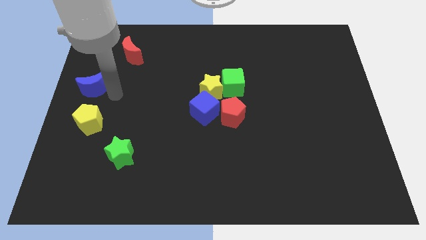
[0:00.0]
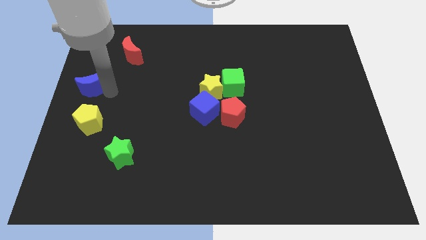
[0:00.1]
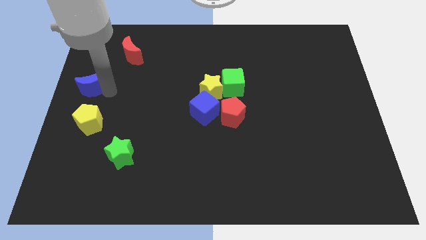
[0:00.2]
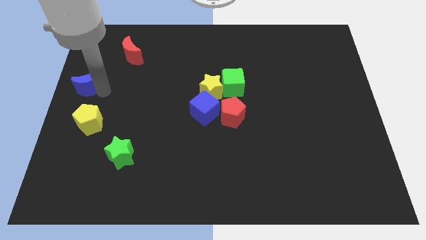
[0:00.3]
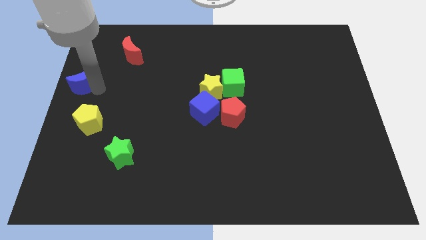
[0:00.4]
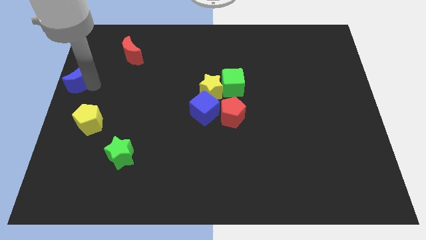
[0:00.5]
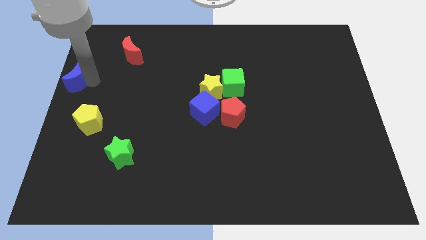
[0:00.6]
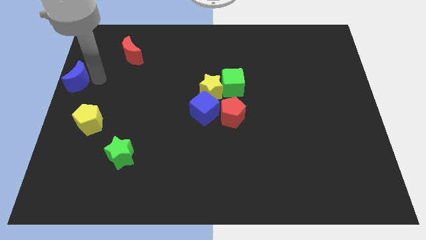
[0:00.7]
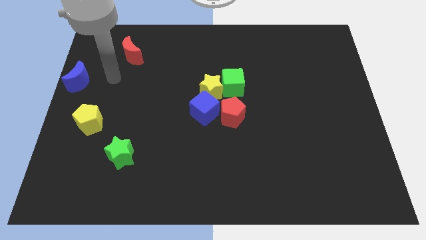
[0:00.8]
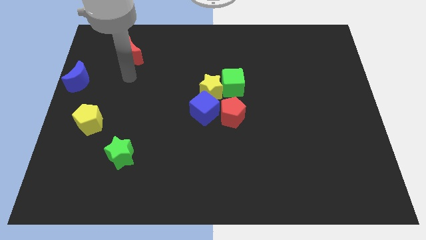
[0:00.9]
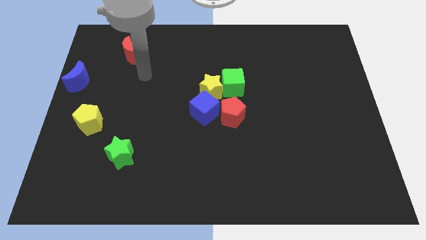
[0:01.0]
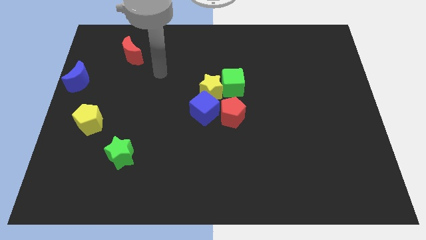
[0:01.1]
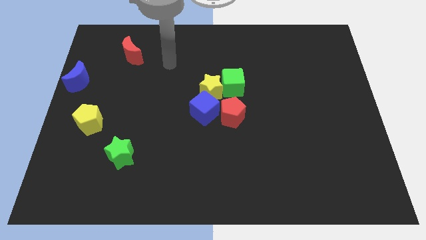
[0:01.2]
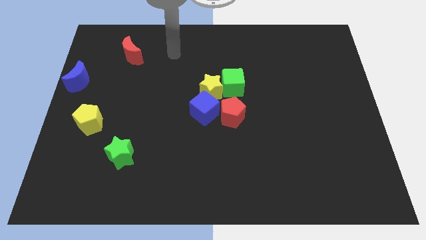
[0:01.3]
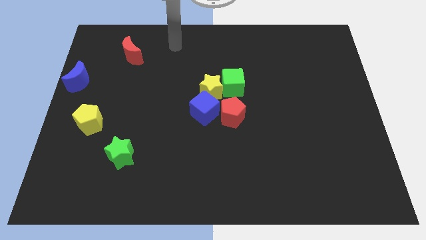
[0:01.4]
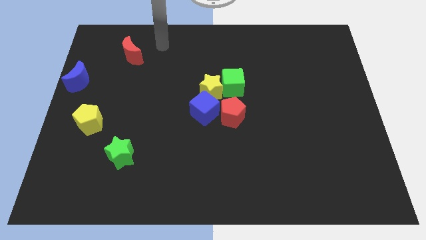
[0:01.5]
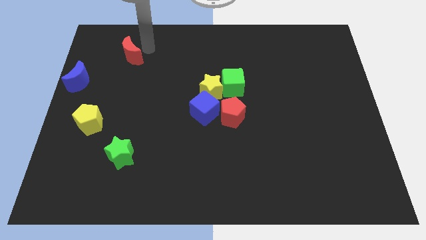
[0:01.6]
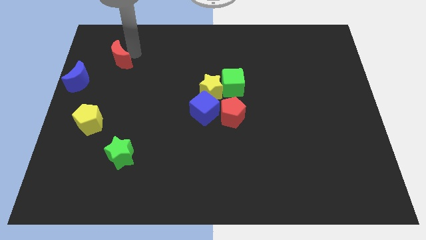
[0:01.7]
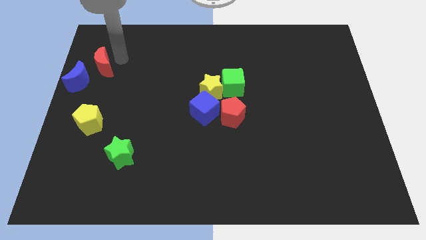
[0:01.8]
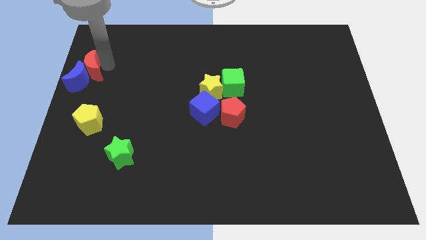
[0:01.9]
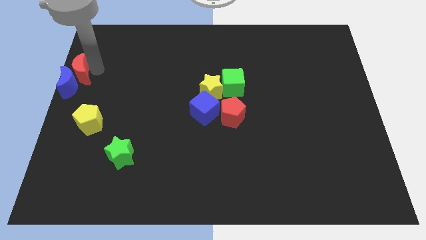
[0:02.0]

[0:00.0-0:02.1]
move the red moon into the blue moon

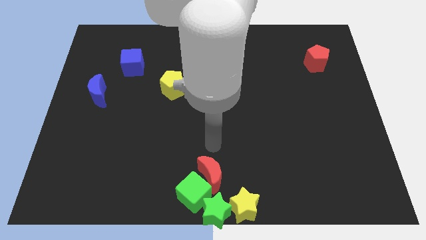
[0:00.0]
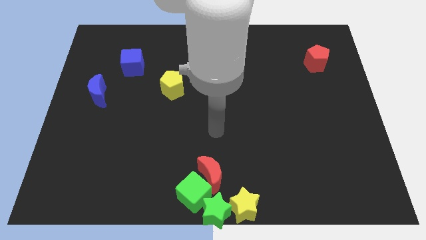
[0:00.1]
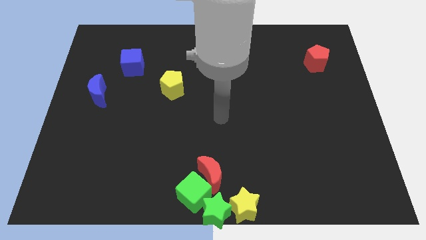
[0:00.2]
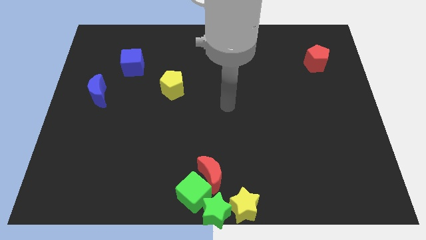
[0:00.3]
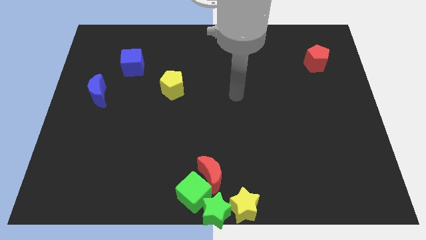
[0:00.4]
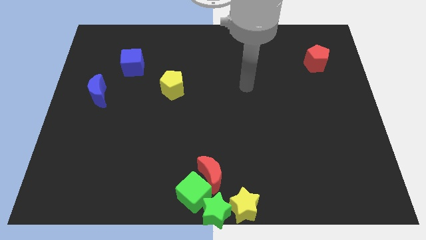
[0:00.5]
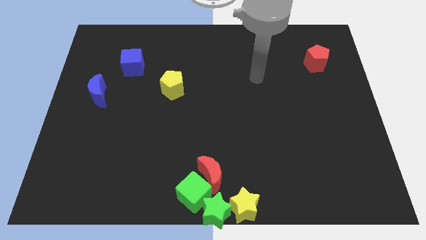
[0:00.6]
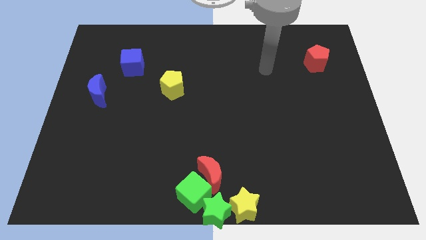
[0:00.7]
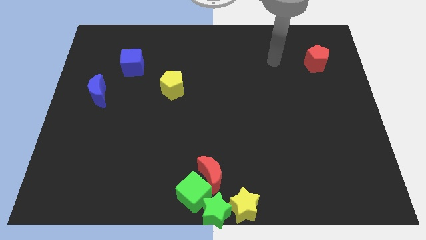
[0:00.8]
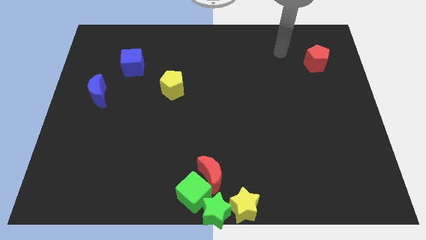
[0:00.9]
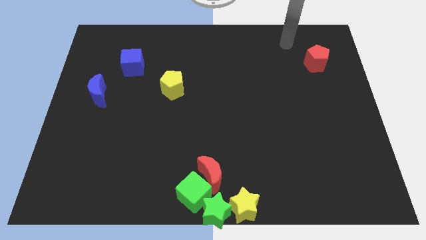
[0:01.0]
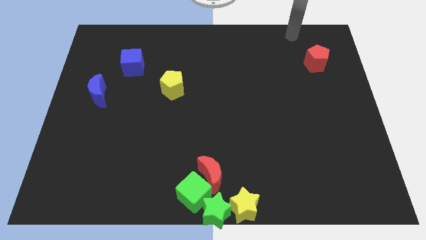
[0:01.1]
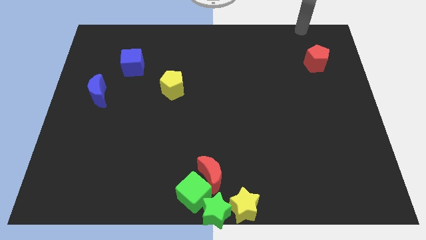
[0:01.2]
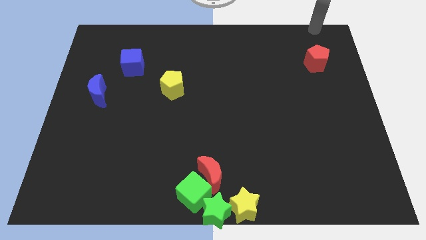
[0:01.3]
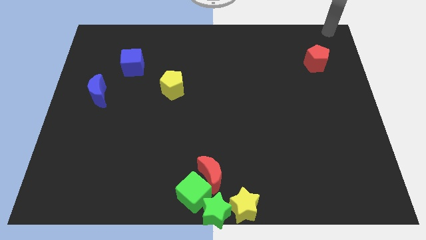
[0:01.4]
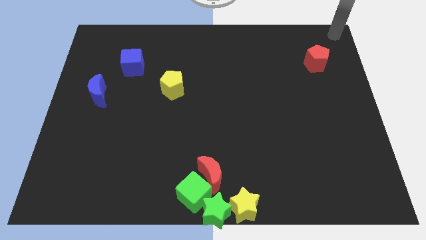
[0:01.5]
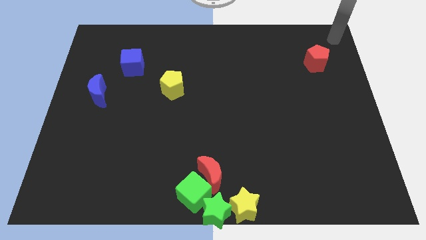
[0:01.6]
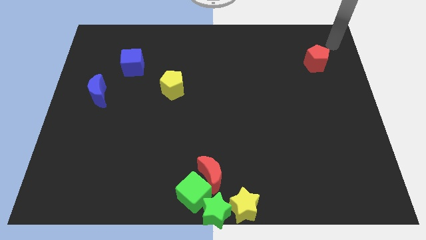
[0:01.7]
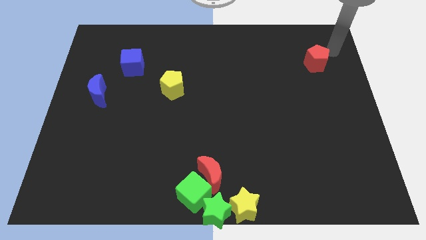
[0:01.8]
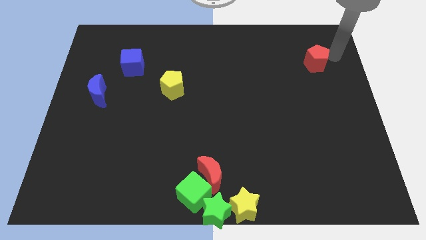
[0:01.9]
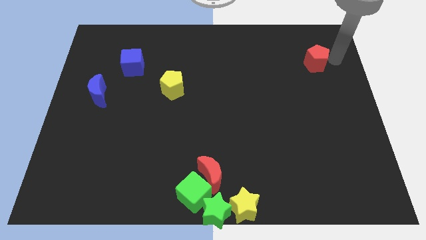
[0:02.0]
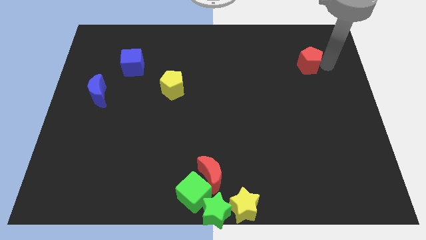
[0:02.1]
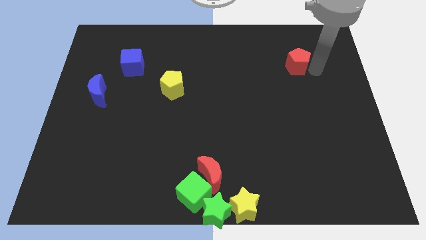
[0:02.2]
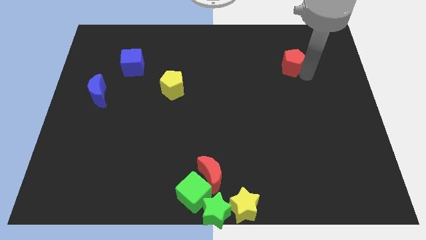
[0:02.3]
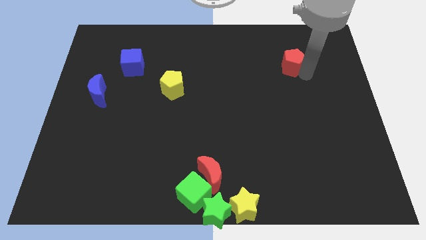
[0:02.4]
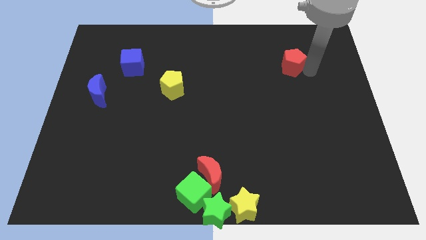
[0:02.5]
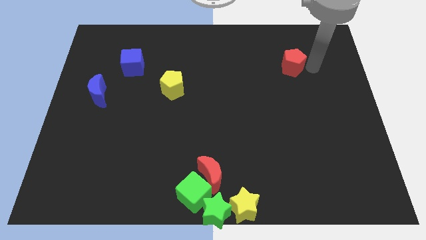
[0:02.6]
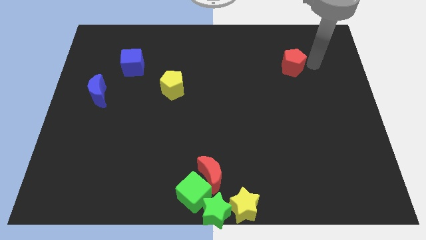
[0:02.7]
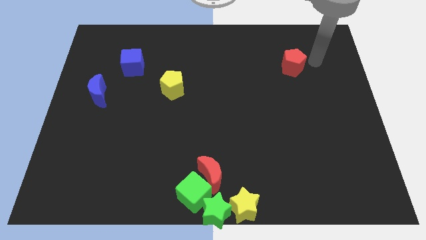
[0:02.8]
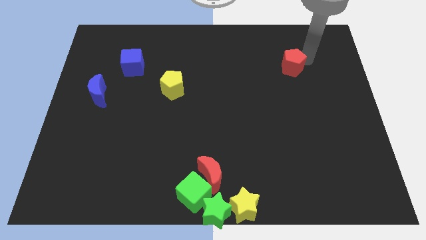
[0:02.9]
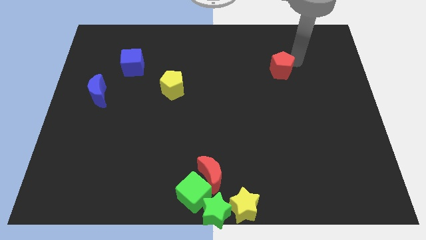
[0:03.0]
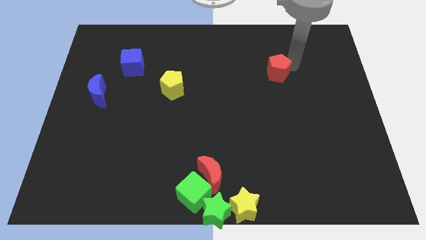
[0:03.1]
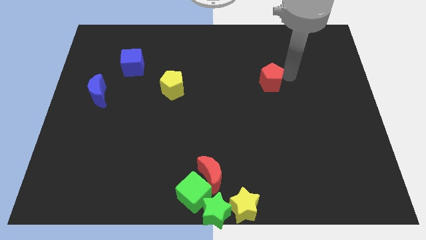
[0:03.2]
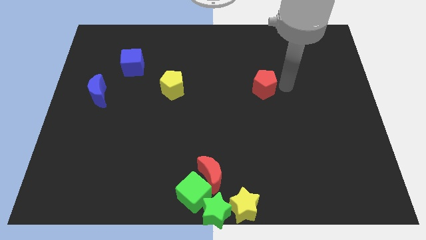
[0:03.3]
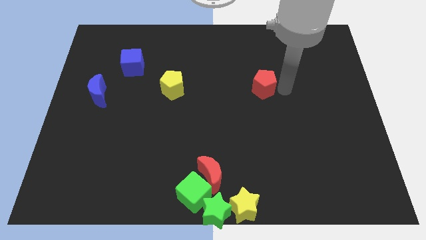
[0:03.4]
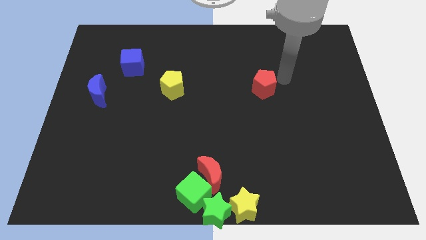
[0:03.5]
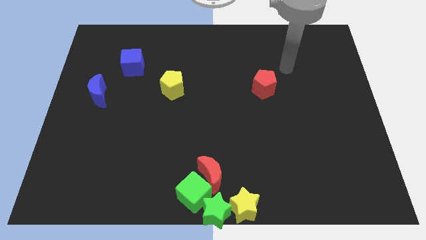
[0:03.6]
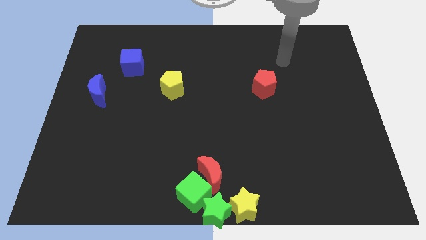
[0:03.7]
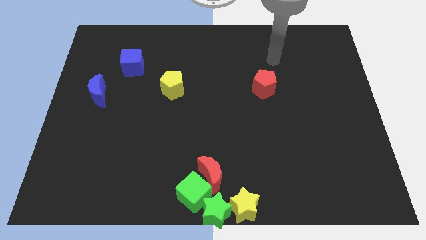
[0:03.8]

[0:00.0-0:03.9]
move the red pentagon to the right of the yellow pentagon

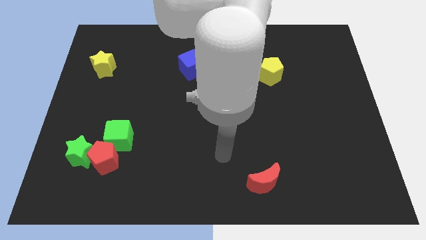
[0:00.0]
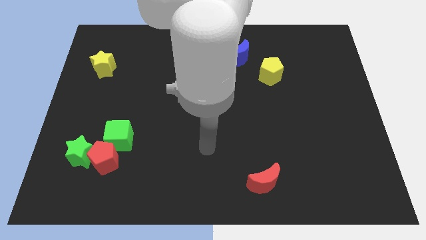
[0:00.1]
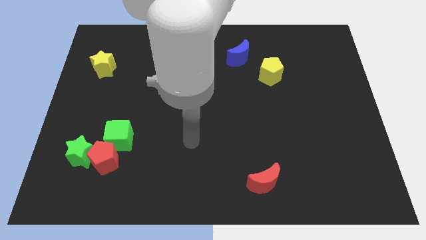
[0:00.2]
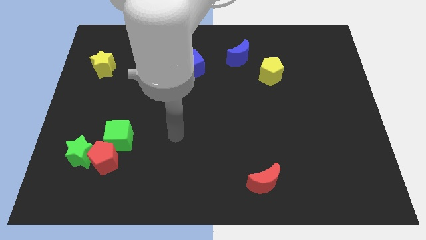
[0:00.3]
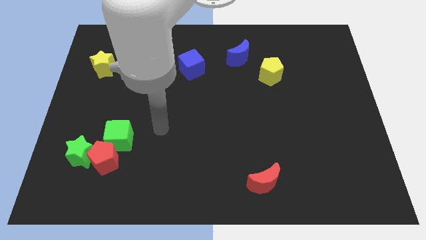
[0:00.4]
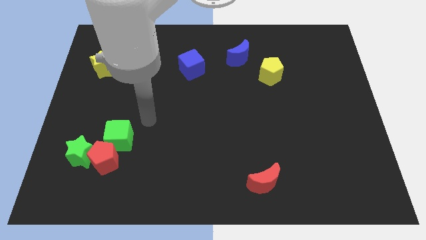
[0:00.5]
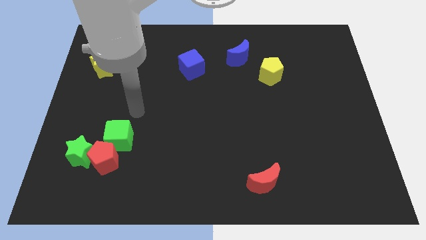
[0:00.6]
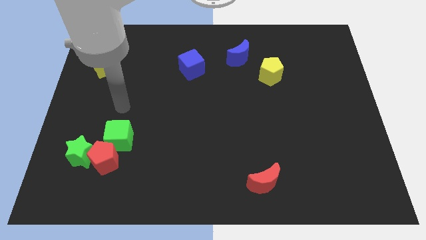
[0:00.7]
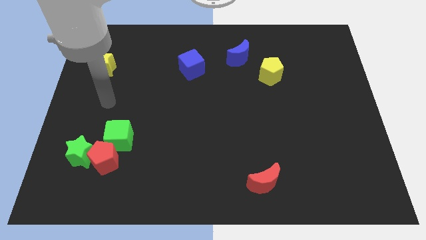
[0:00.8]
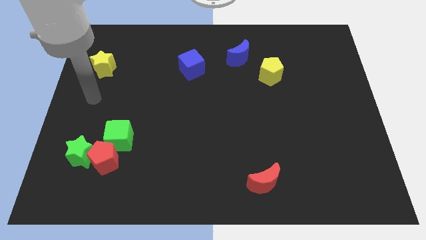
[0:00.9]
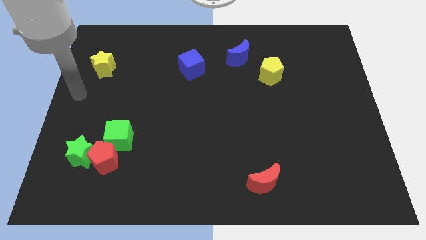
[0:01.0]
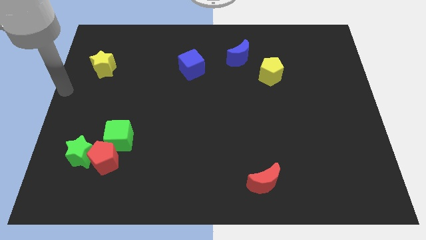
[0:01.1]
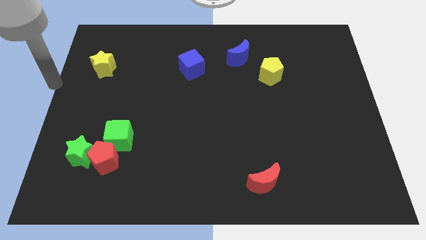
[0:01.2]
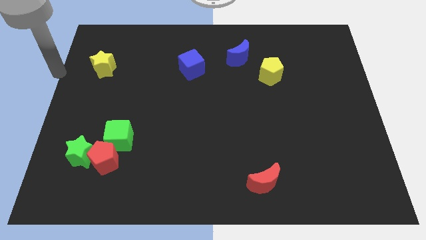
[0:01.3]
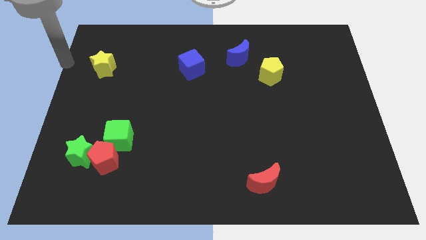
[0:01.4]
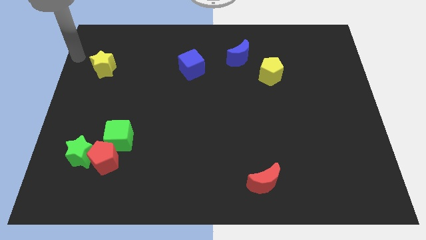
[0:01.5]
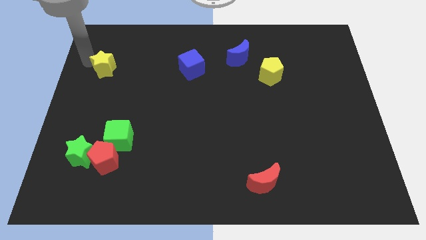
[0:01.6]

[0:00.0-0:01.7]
move the arm left to the yellow star

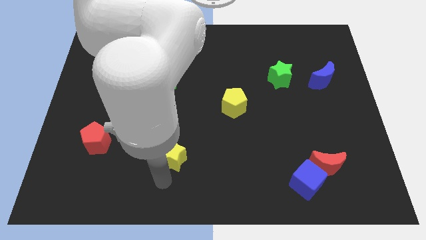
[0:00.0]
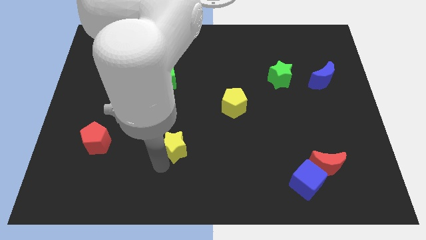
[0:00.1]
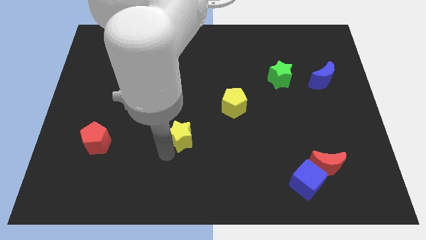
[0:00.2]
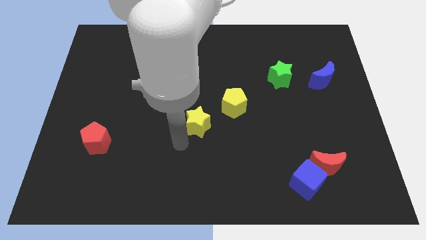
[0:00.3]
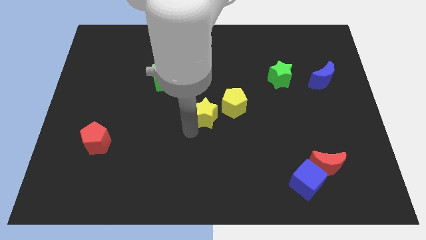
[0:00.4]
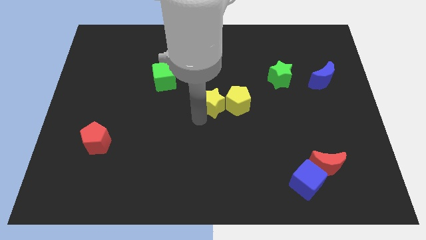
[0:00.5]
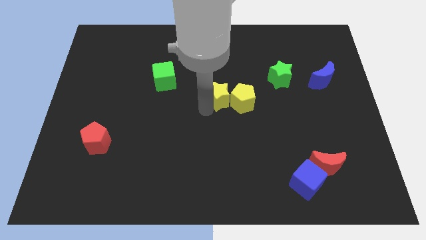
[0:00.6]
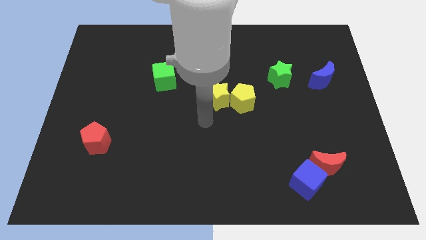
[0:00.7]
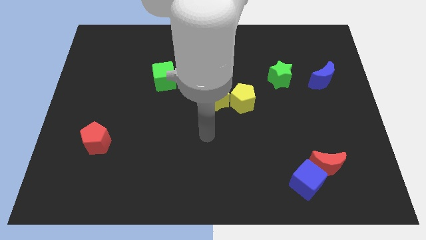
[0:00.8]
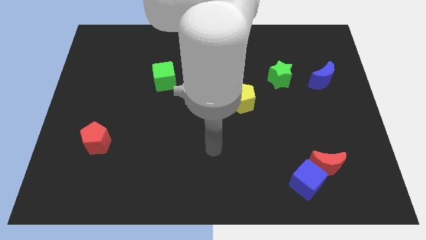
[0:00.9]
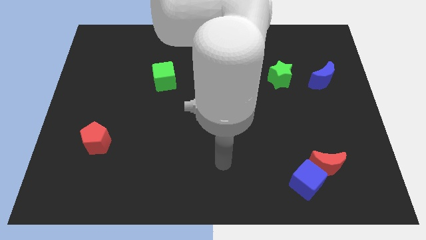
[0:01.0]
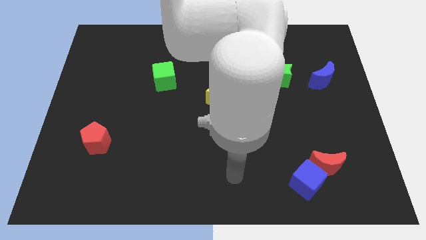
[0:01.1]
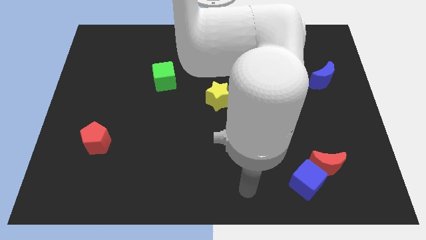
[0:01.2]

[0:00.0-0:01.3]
place the yellow star diagonal to the right of the red pentagon
